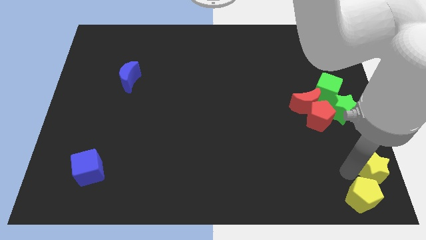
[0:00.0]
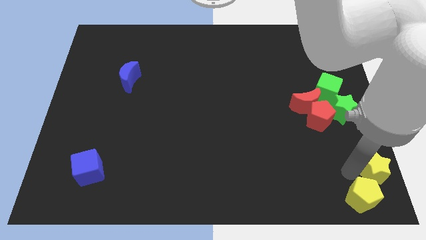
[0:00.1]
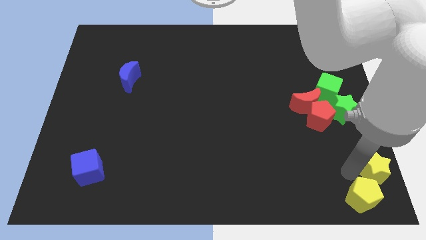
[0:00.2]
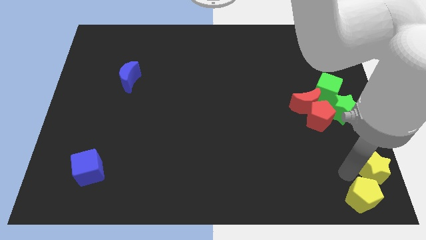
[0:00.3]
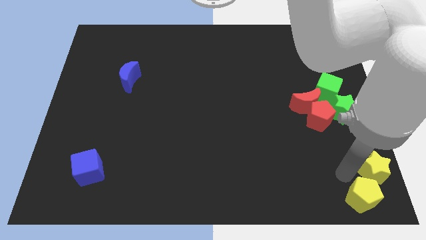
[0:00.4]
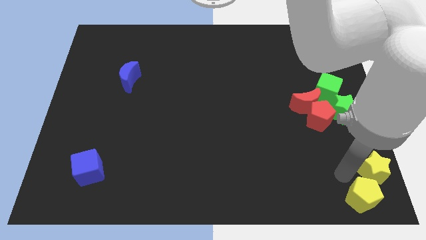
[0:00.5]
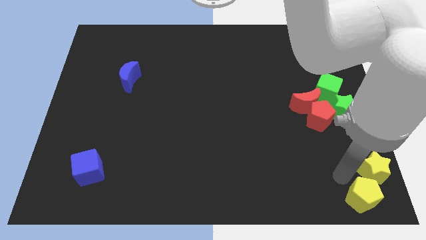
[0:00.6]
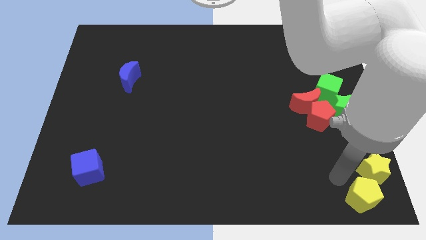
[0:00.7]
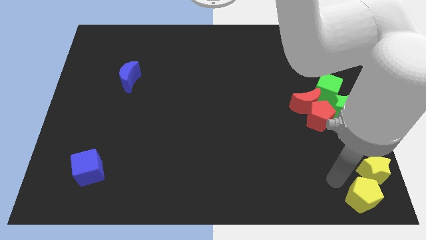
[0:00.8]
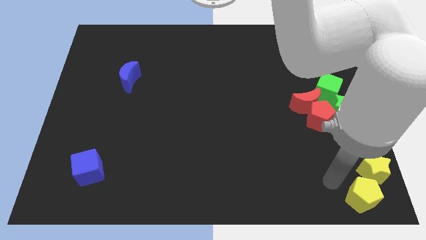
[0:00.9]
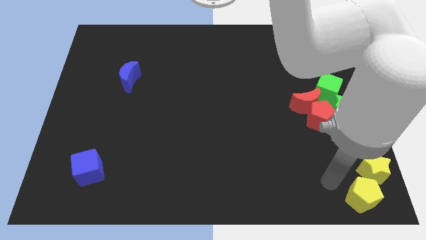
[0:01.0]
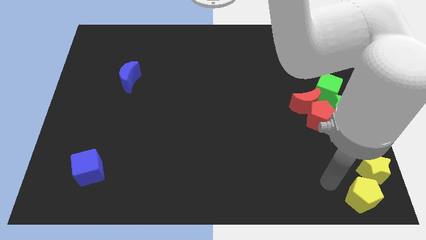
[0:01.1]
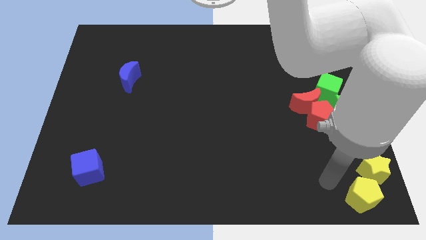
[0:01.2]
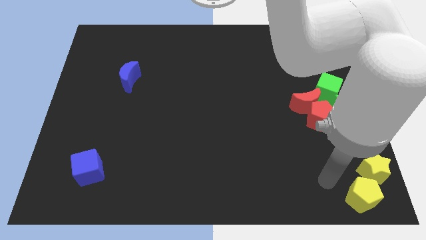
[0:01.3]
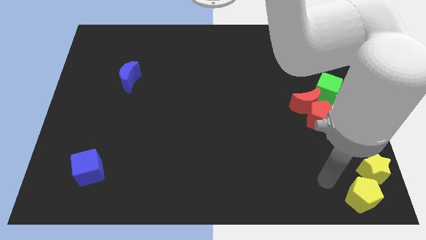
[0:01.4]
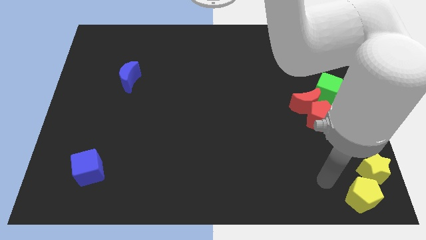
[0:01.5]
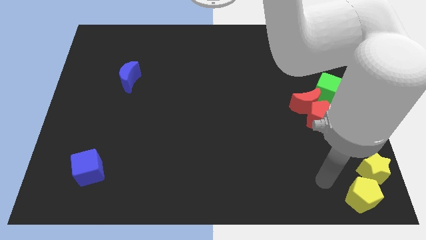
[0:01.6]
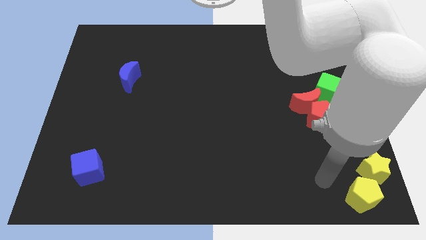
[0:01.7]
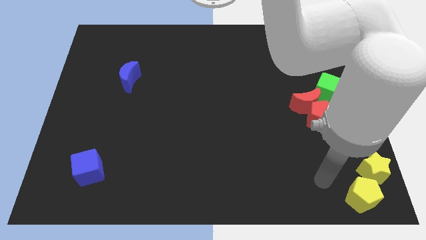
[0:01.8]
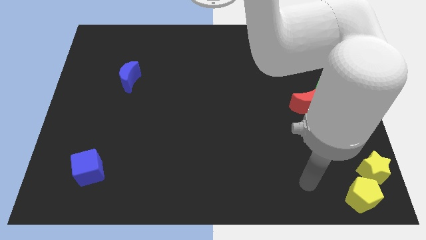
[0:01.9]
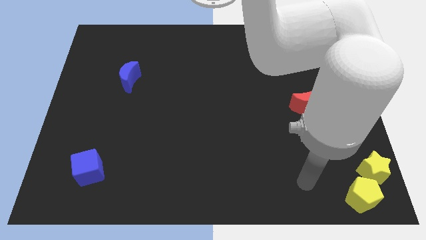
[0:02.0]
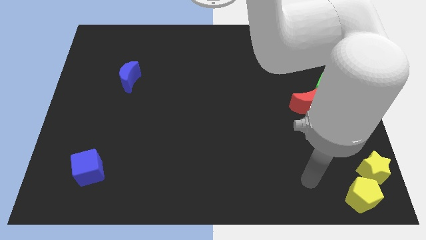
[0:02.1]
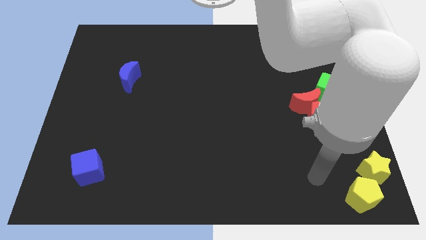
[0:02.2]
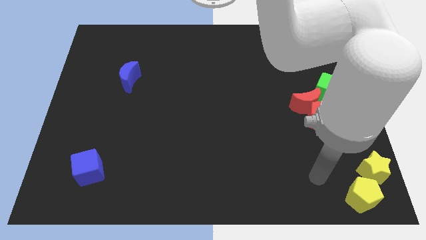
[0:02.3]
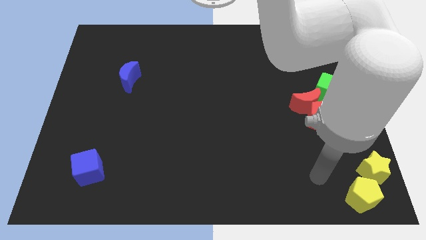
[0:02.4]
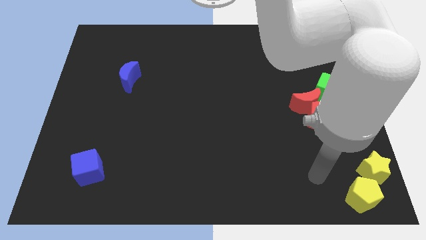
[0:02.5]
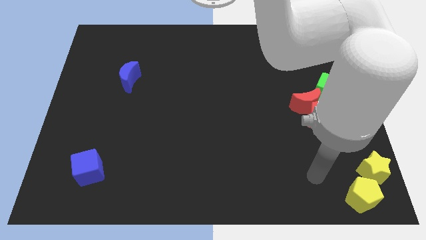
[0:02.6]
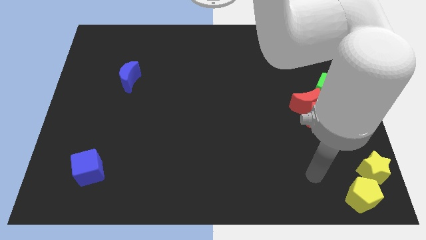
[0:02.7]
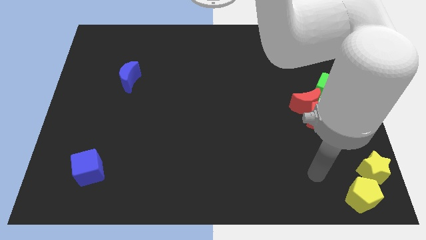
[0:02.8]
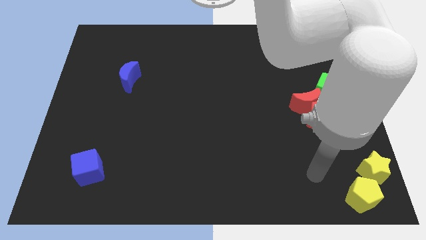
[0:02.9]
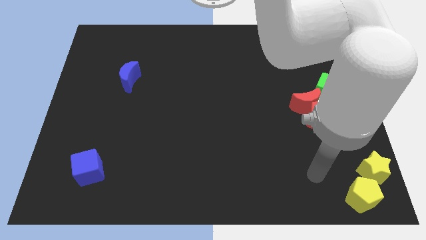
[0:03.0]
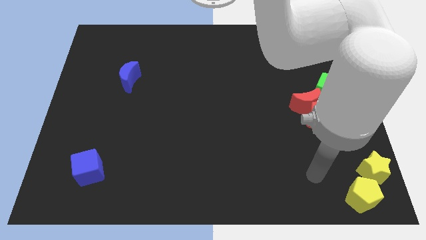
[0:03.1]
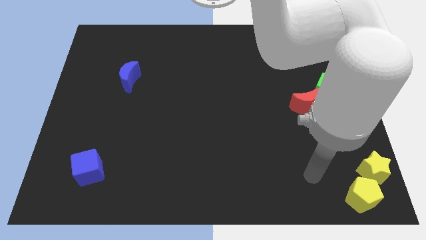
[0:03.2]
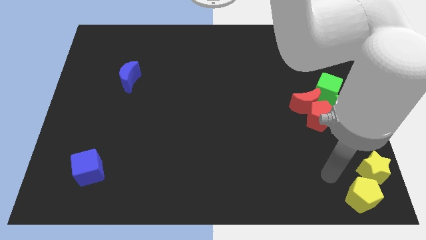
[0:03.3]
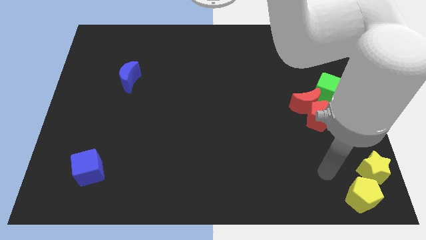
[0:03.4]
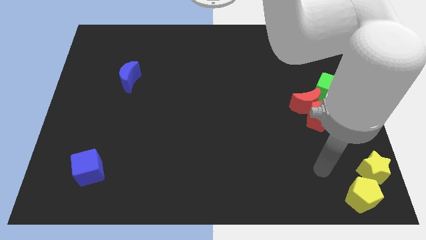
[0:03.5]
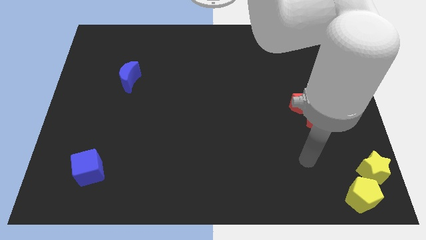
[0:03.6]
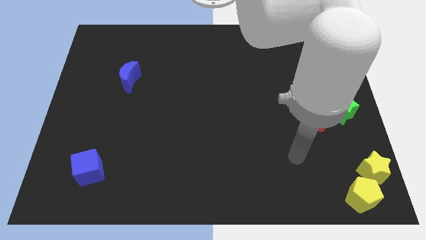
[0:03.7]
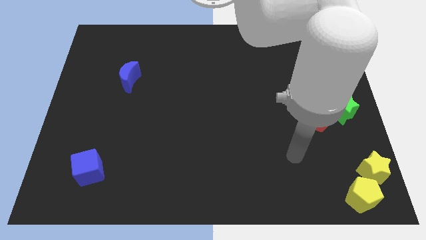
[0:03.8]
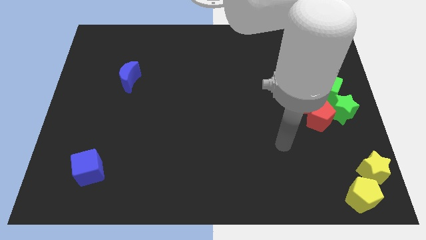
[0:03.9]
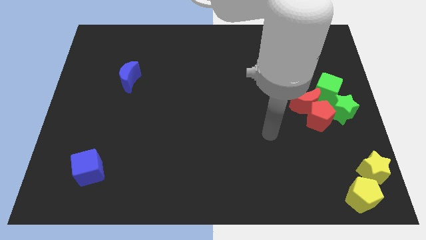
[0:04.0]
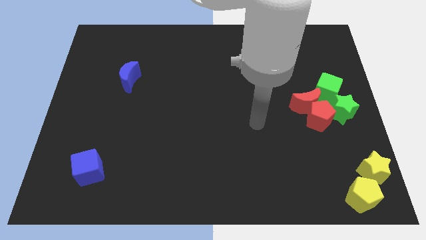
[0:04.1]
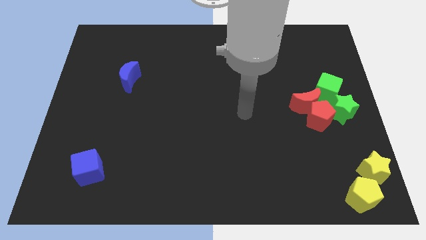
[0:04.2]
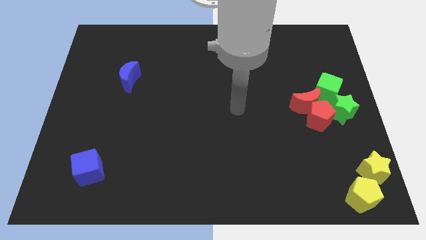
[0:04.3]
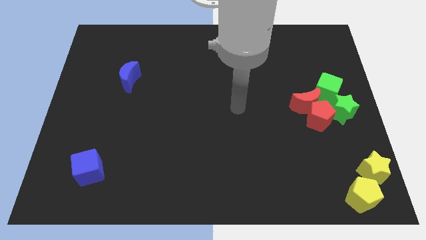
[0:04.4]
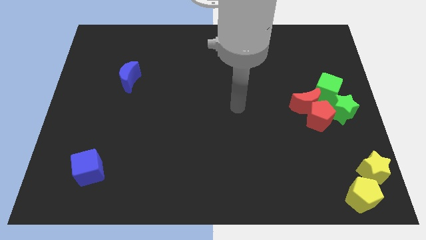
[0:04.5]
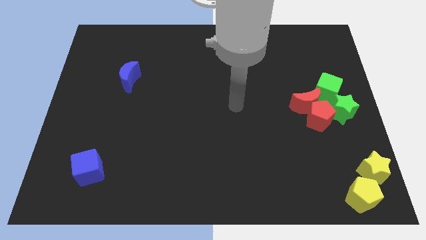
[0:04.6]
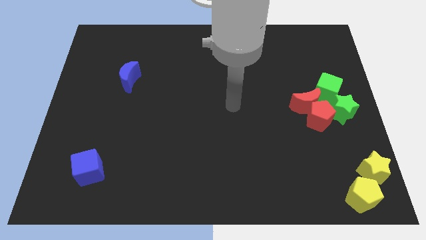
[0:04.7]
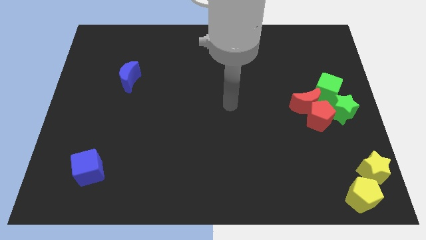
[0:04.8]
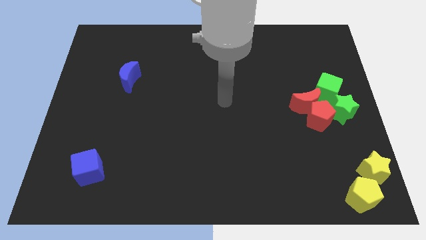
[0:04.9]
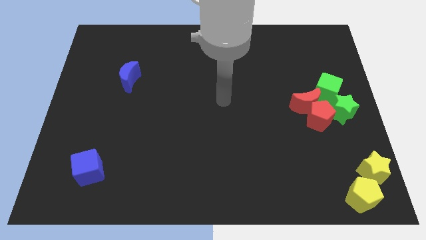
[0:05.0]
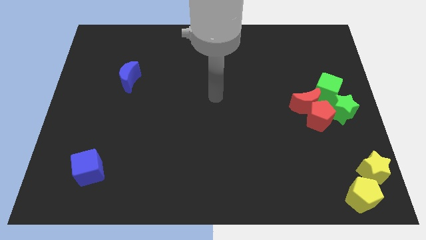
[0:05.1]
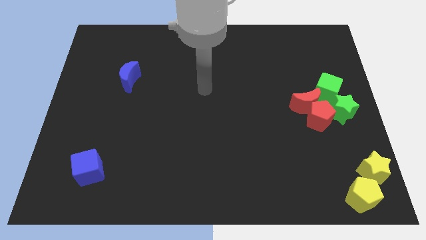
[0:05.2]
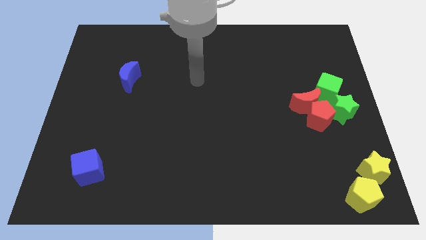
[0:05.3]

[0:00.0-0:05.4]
move your arm away from the yellow star

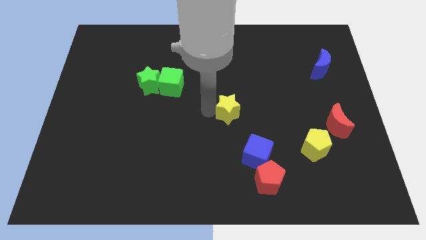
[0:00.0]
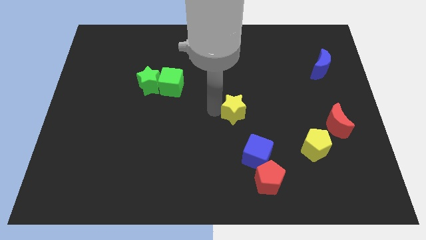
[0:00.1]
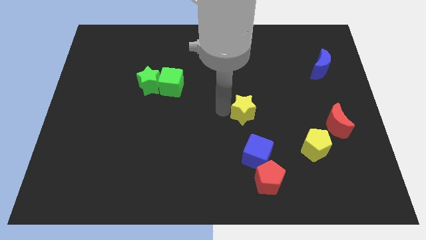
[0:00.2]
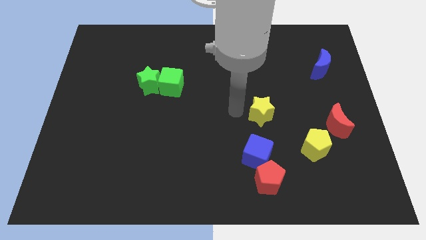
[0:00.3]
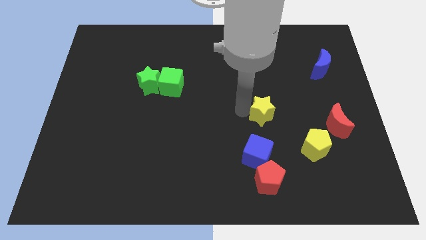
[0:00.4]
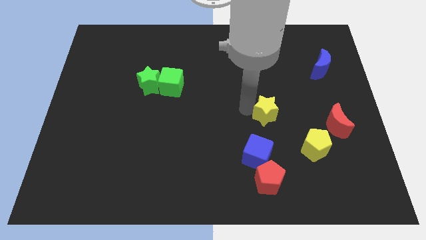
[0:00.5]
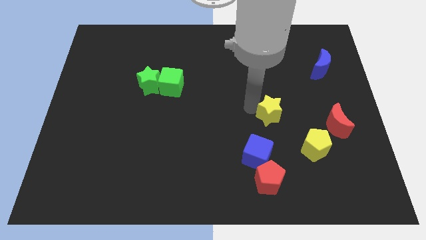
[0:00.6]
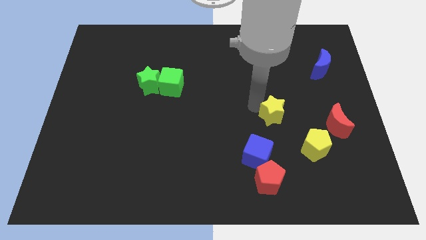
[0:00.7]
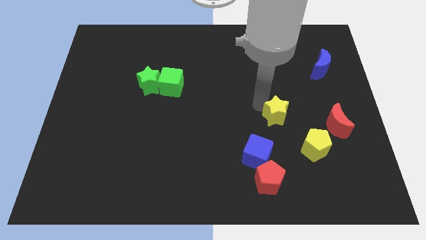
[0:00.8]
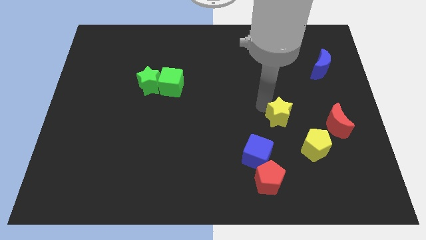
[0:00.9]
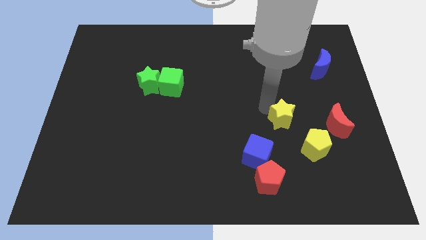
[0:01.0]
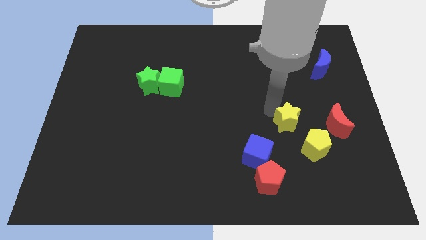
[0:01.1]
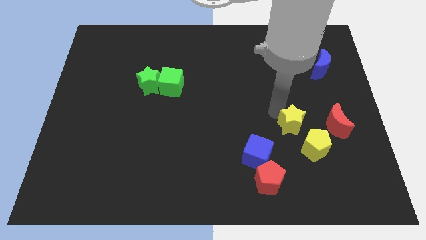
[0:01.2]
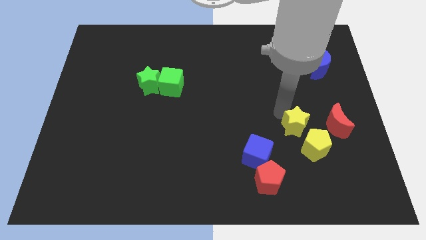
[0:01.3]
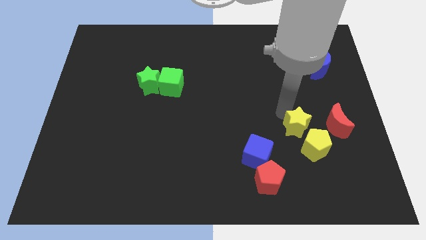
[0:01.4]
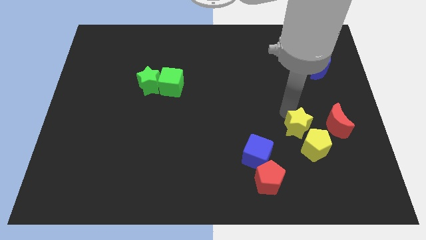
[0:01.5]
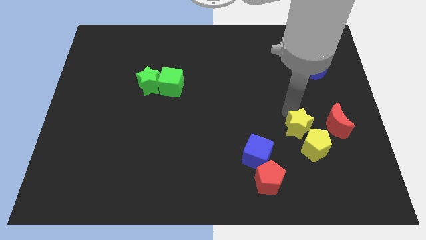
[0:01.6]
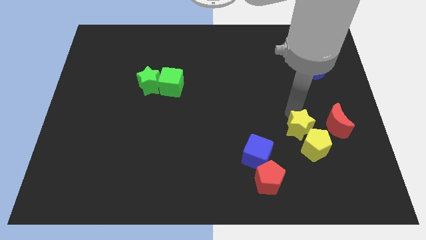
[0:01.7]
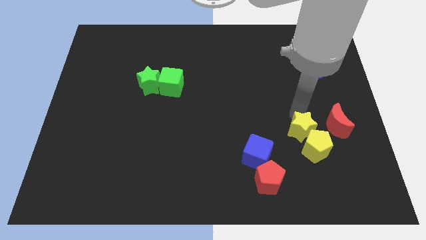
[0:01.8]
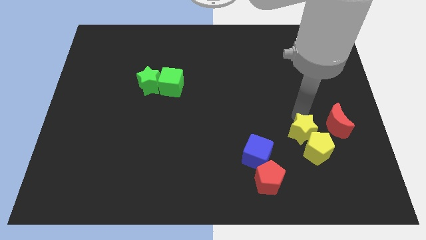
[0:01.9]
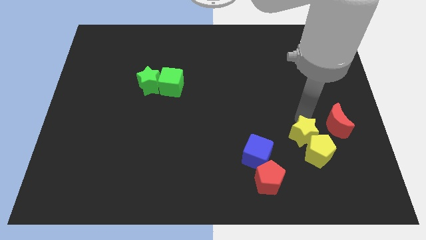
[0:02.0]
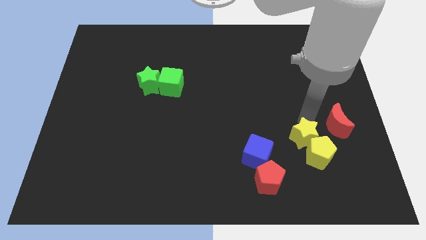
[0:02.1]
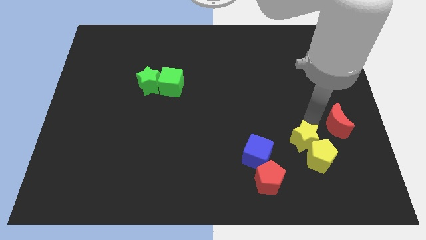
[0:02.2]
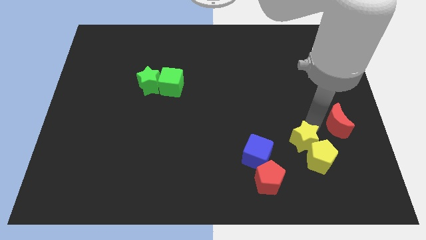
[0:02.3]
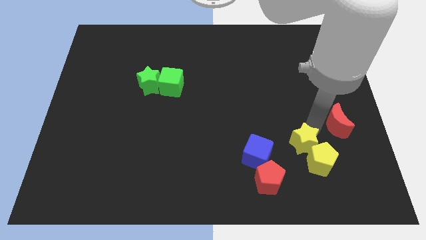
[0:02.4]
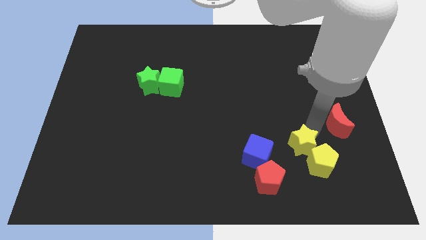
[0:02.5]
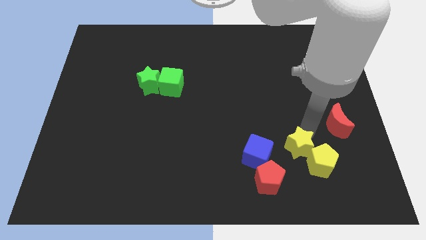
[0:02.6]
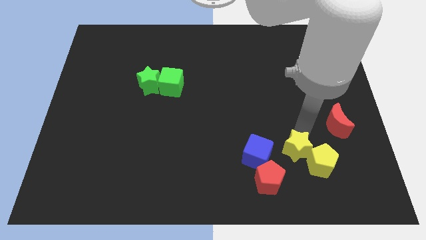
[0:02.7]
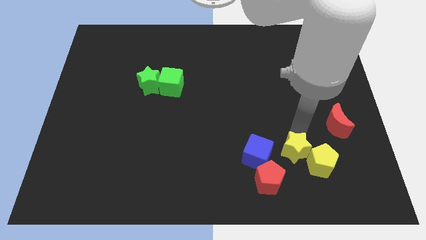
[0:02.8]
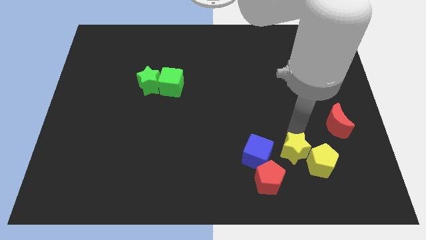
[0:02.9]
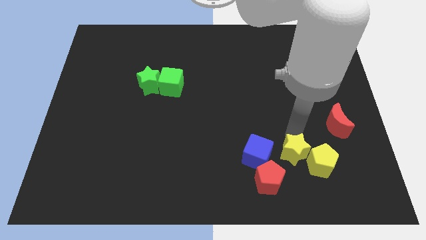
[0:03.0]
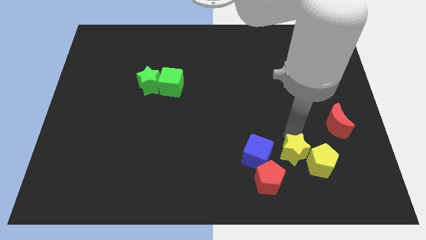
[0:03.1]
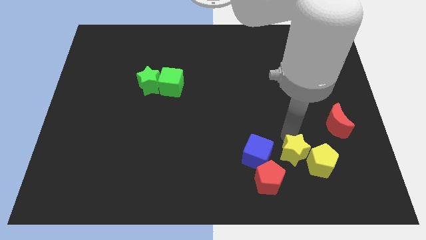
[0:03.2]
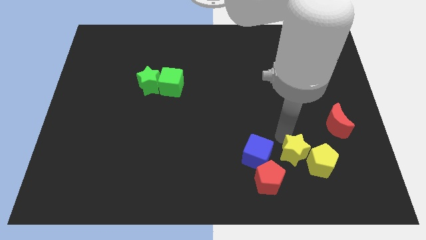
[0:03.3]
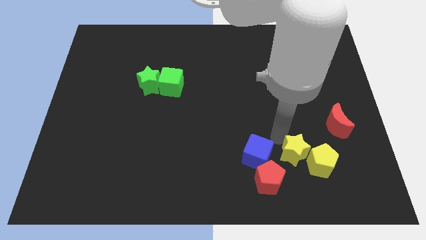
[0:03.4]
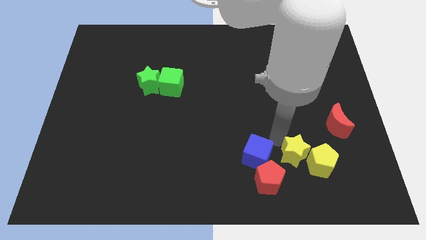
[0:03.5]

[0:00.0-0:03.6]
push the yellow star to the left of the yellow pentagon
